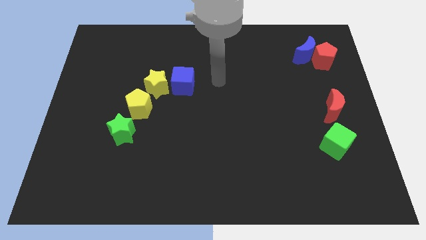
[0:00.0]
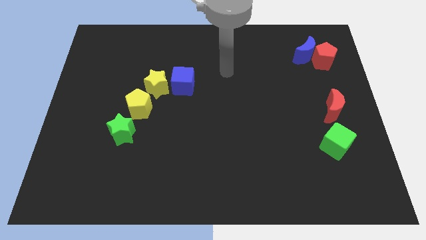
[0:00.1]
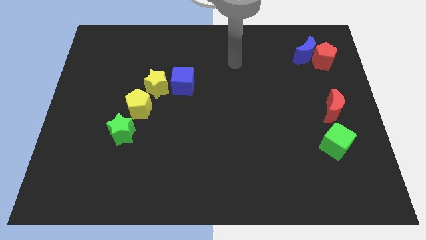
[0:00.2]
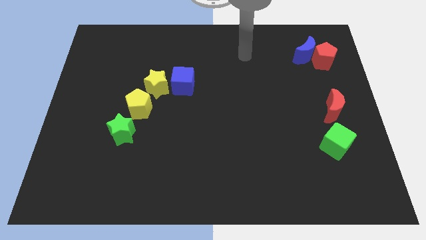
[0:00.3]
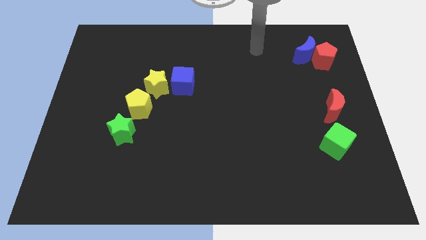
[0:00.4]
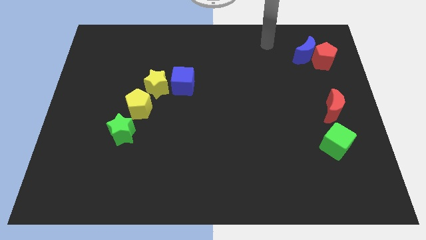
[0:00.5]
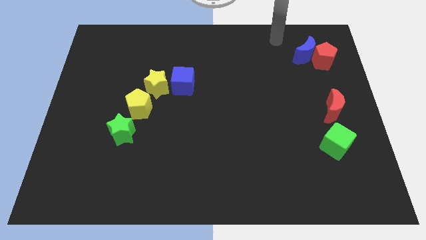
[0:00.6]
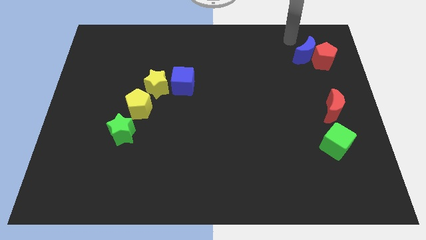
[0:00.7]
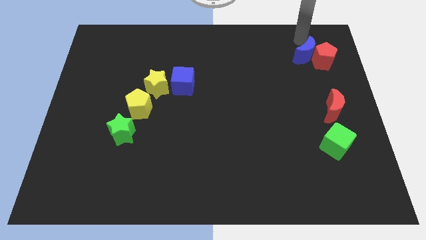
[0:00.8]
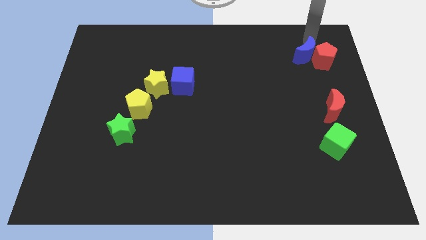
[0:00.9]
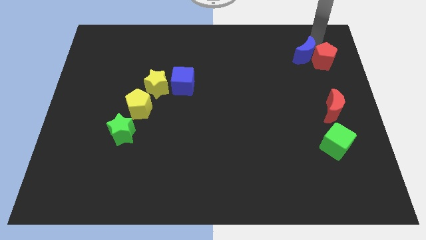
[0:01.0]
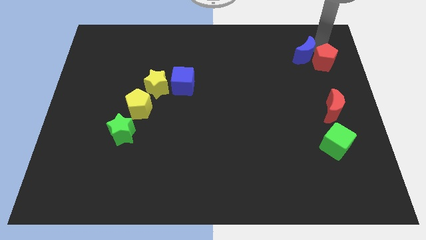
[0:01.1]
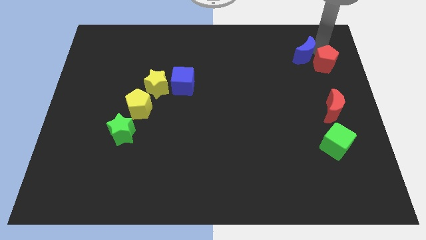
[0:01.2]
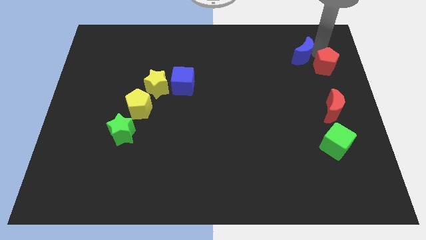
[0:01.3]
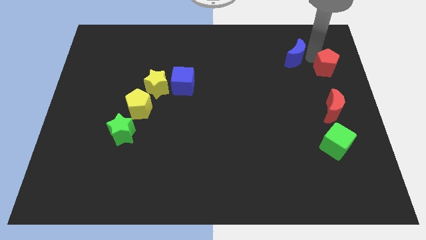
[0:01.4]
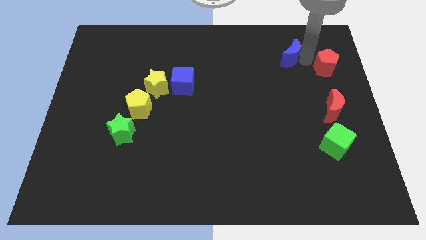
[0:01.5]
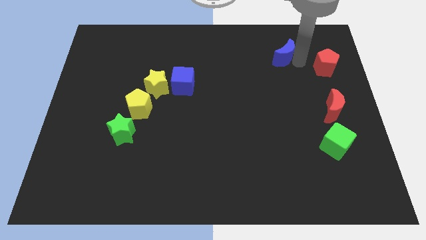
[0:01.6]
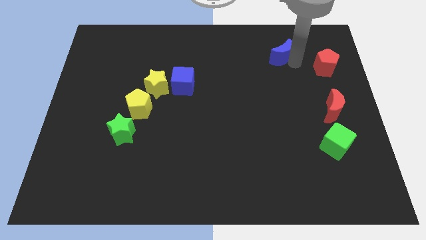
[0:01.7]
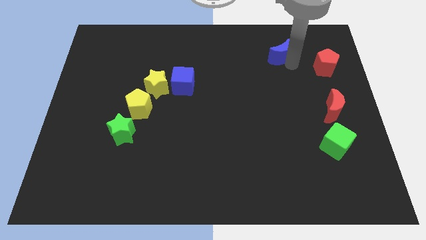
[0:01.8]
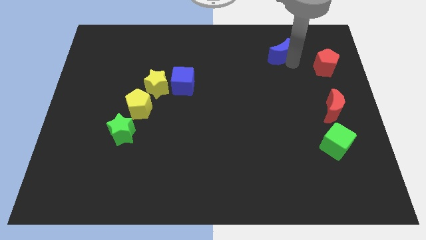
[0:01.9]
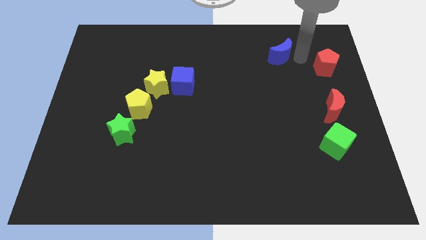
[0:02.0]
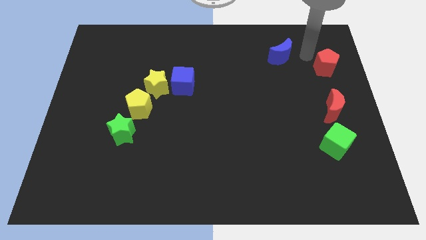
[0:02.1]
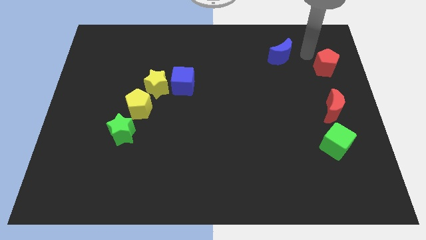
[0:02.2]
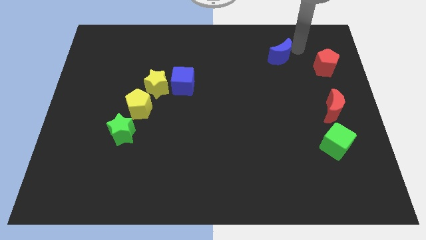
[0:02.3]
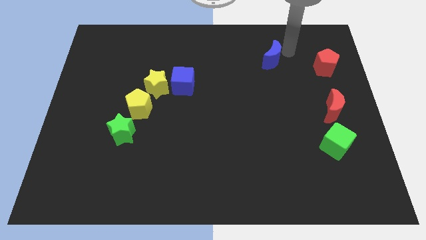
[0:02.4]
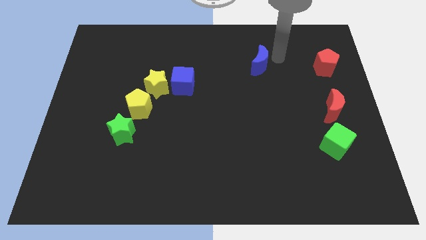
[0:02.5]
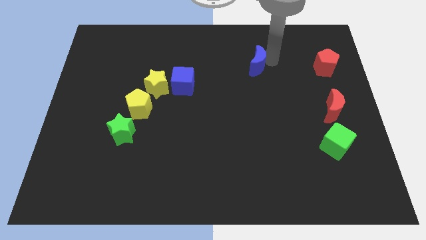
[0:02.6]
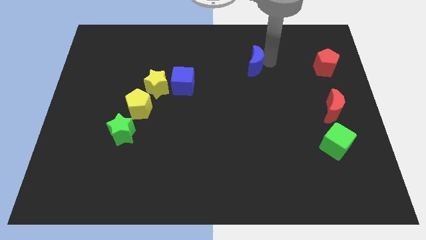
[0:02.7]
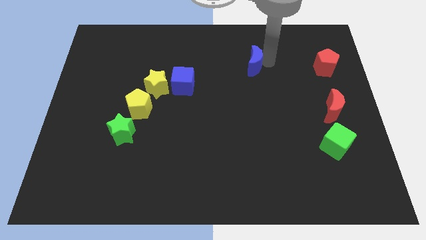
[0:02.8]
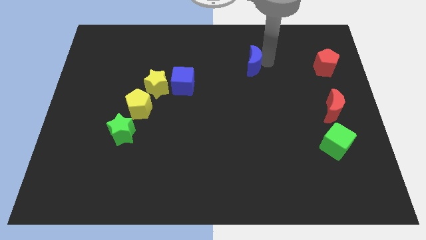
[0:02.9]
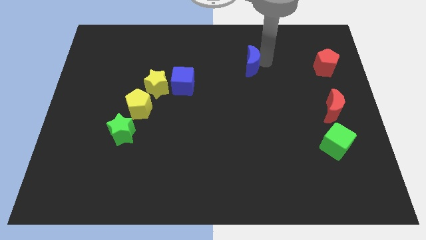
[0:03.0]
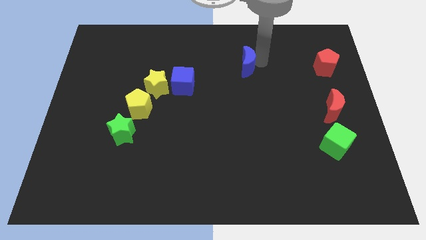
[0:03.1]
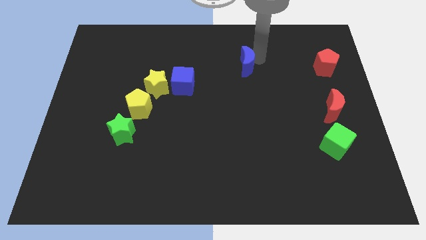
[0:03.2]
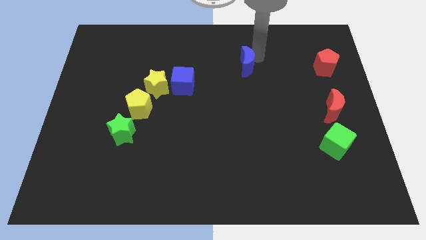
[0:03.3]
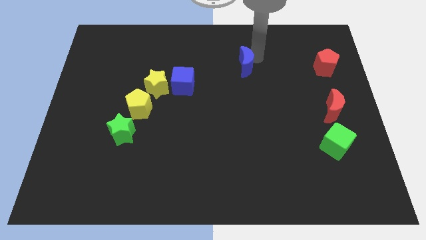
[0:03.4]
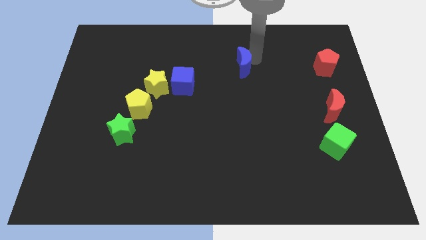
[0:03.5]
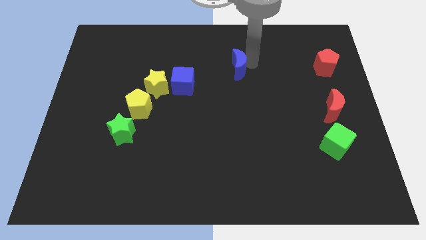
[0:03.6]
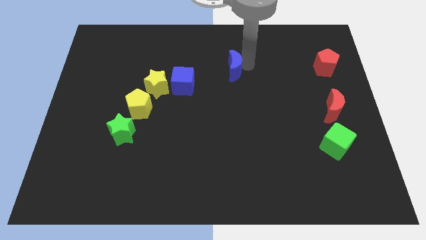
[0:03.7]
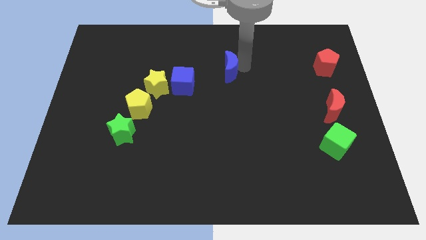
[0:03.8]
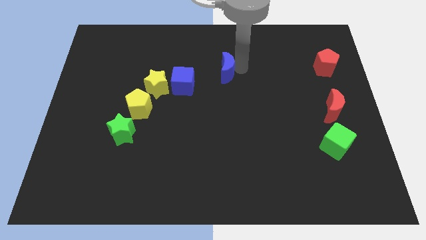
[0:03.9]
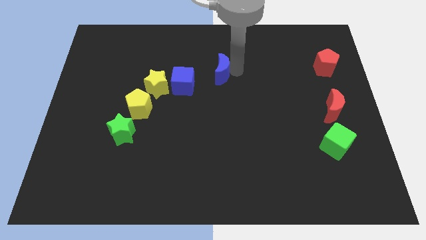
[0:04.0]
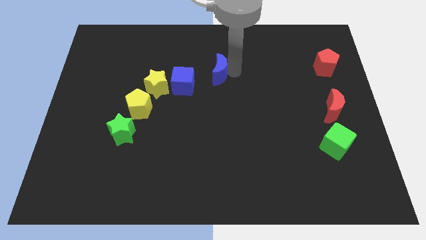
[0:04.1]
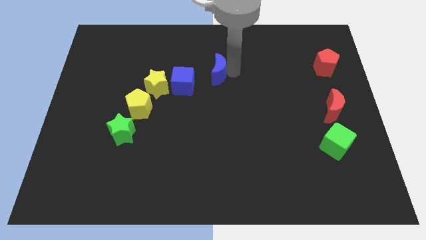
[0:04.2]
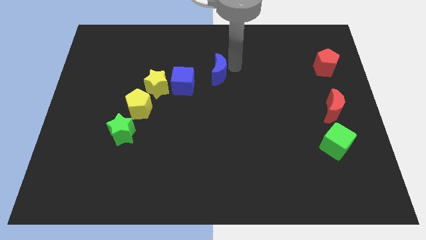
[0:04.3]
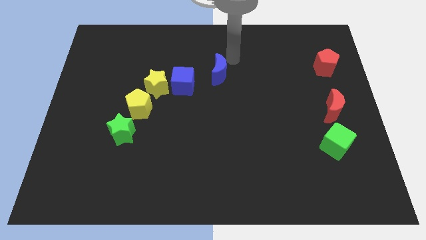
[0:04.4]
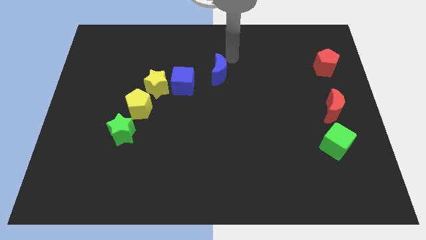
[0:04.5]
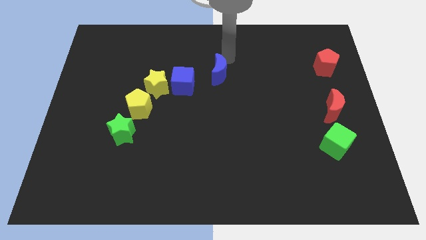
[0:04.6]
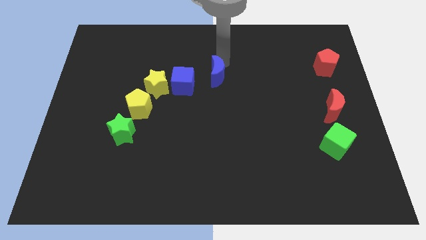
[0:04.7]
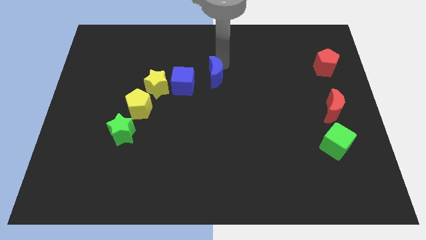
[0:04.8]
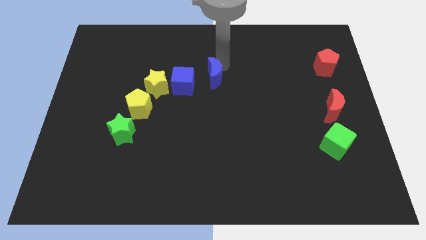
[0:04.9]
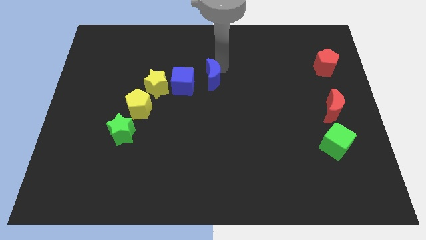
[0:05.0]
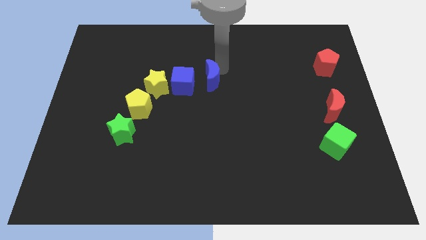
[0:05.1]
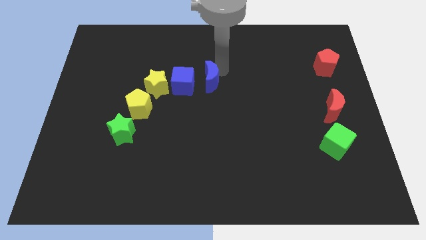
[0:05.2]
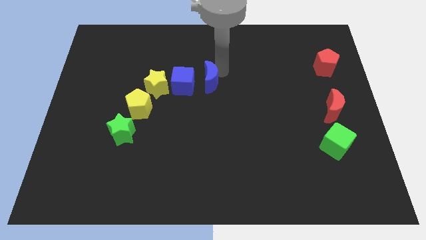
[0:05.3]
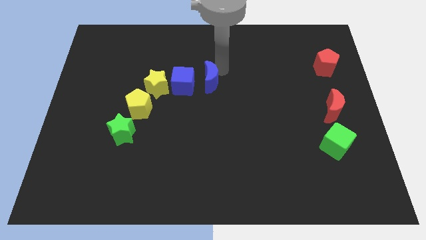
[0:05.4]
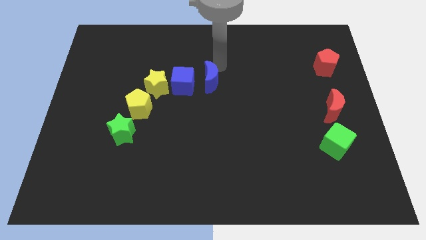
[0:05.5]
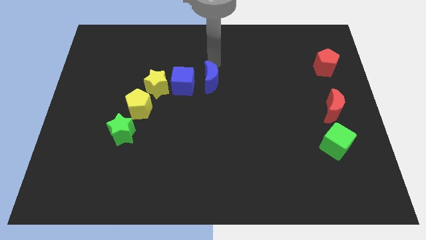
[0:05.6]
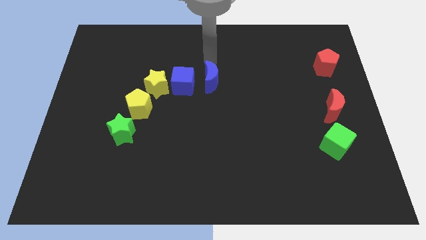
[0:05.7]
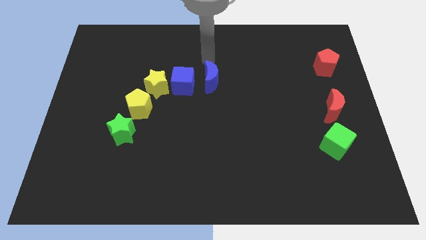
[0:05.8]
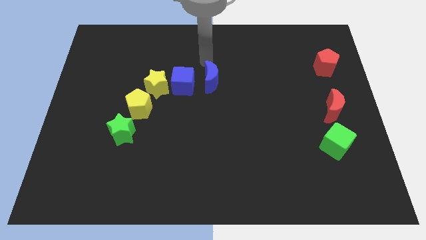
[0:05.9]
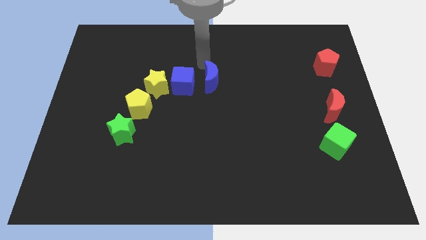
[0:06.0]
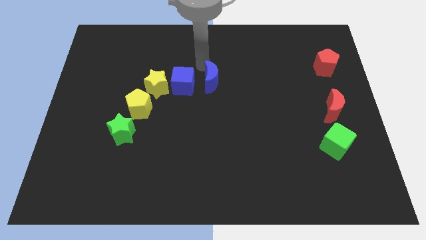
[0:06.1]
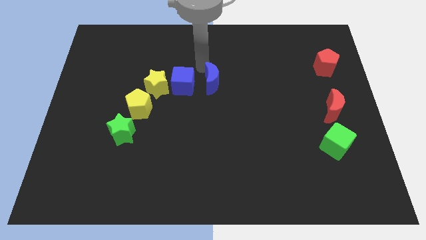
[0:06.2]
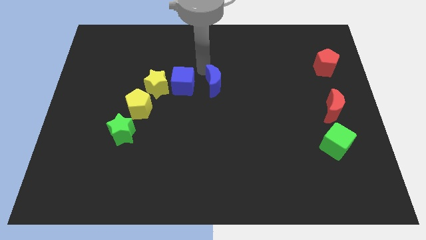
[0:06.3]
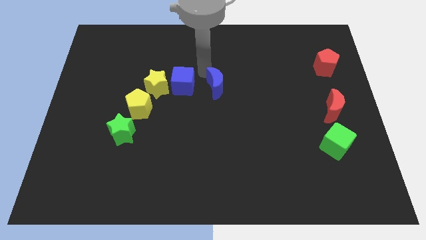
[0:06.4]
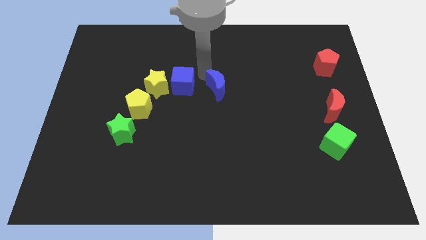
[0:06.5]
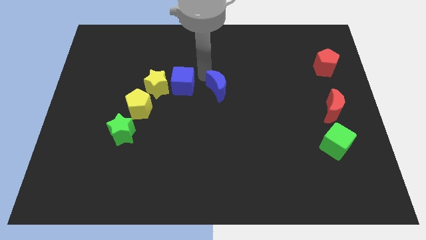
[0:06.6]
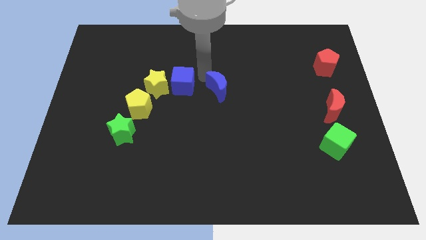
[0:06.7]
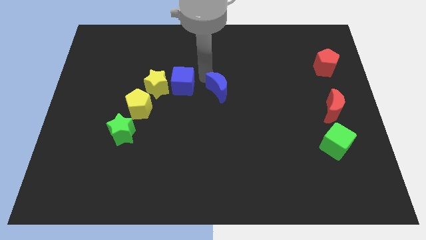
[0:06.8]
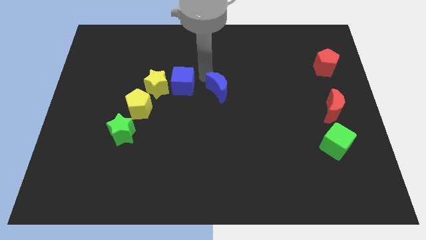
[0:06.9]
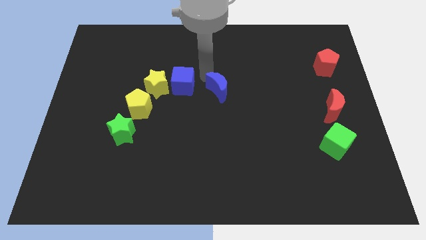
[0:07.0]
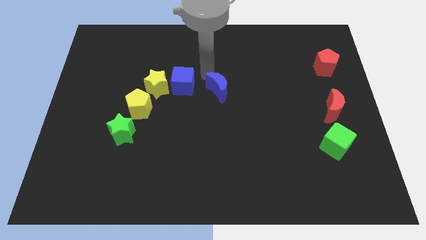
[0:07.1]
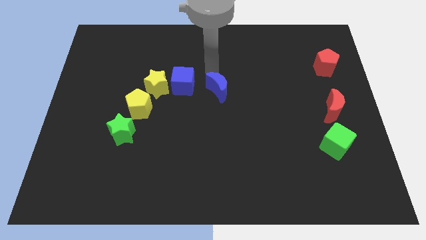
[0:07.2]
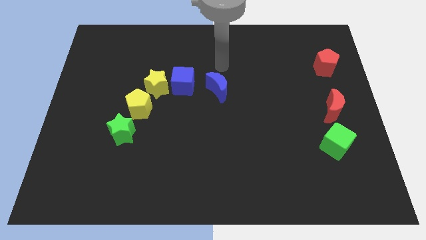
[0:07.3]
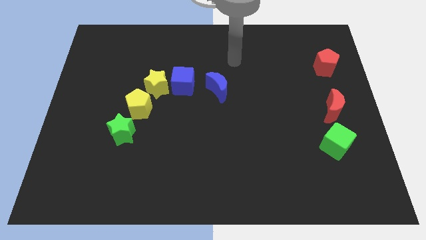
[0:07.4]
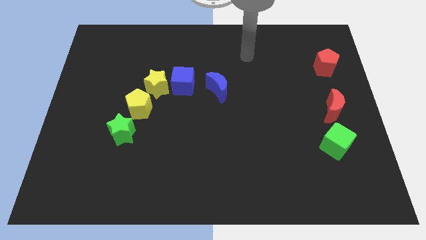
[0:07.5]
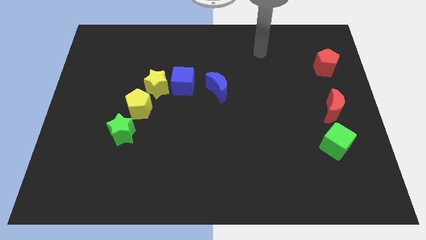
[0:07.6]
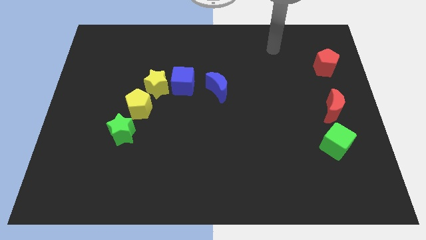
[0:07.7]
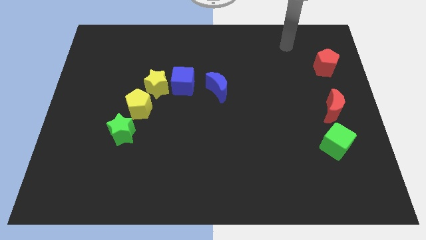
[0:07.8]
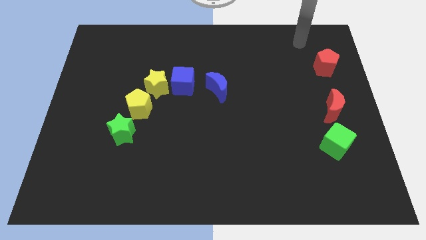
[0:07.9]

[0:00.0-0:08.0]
push the blue crescent to the center of the board

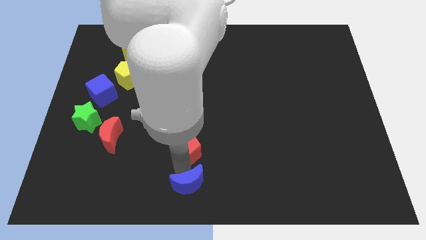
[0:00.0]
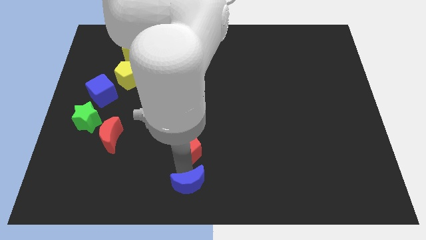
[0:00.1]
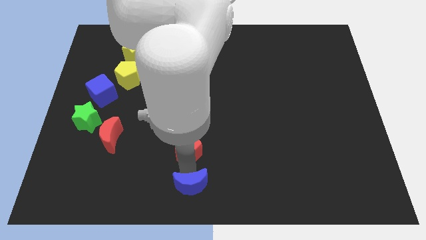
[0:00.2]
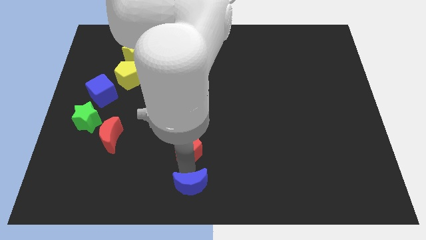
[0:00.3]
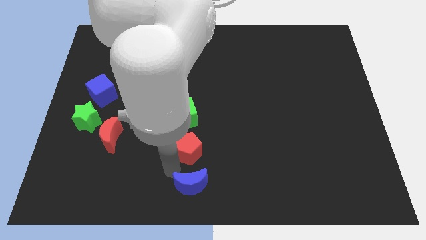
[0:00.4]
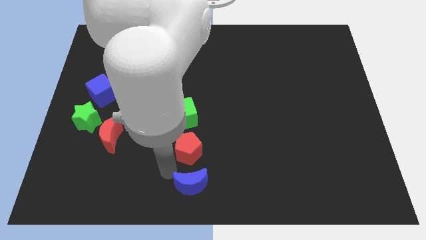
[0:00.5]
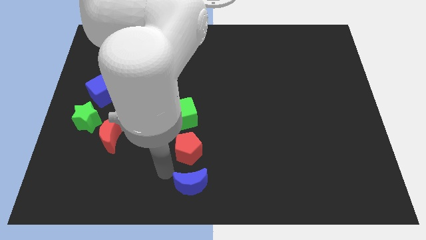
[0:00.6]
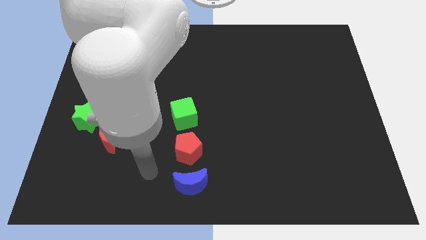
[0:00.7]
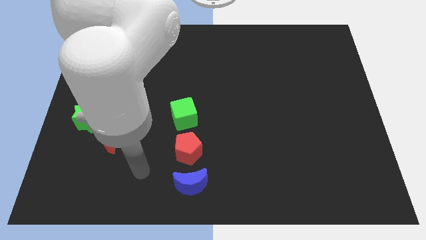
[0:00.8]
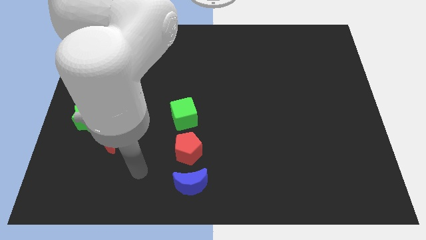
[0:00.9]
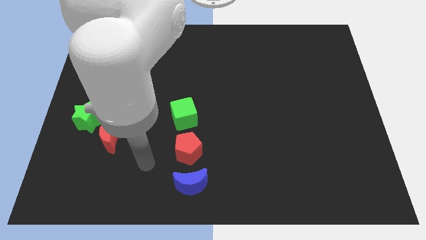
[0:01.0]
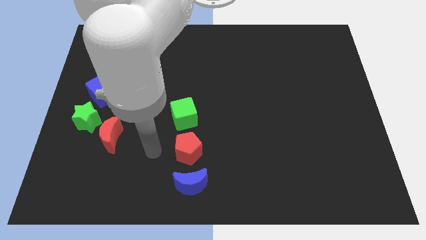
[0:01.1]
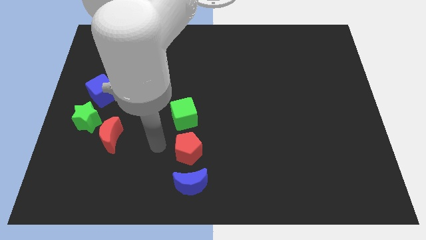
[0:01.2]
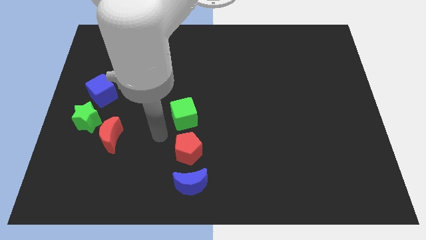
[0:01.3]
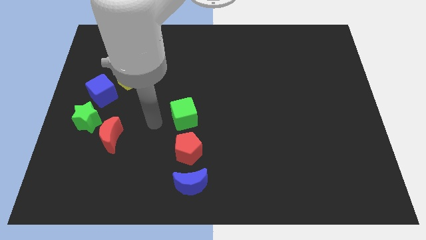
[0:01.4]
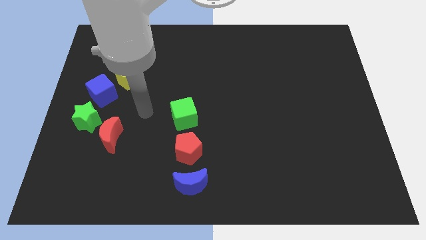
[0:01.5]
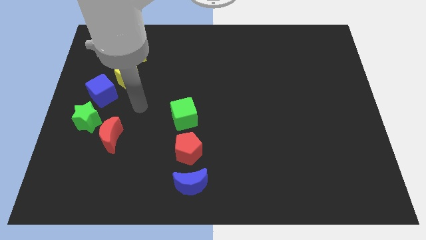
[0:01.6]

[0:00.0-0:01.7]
move your arm away from the blue moon
